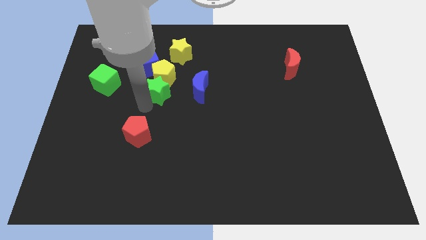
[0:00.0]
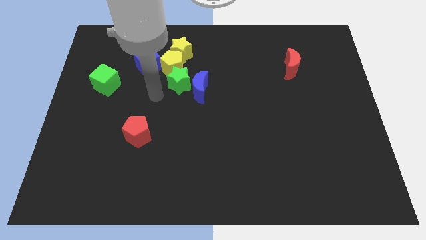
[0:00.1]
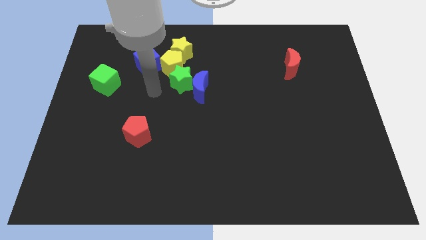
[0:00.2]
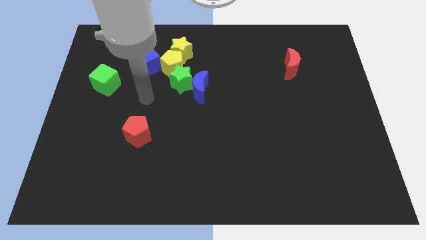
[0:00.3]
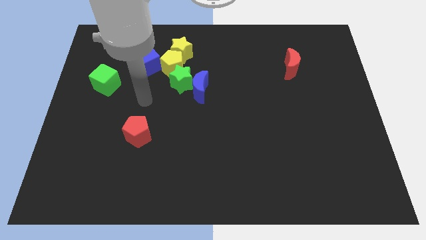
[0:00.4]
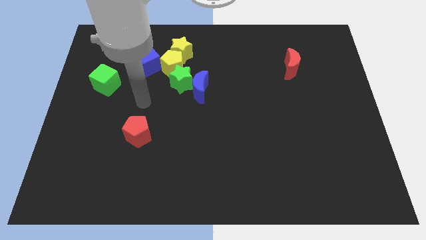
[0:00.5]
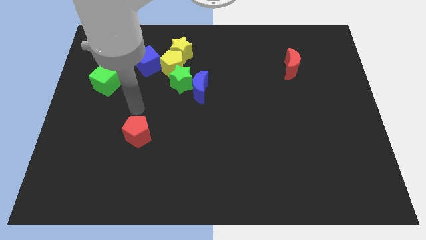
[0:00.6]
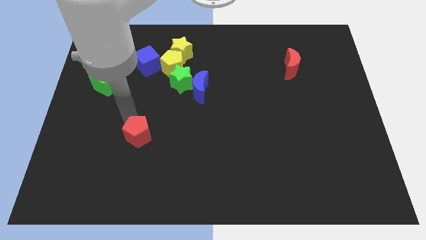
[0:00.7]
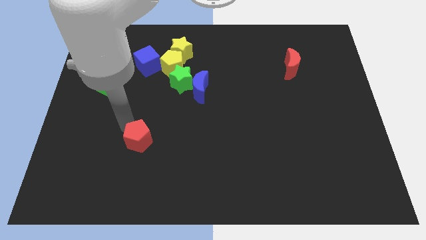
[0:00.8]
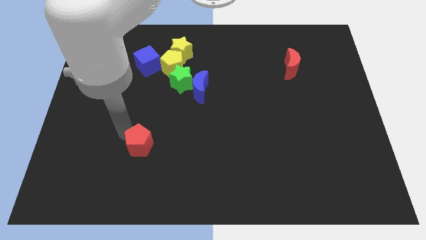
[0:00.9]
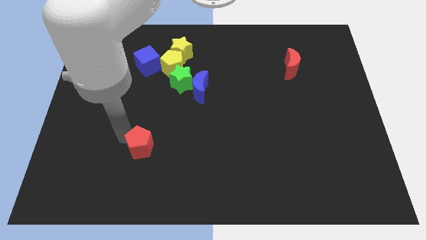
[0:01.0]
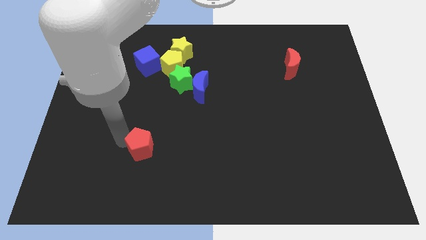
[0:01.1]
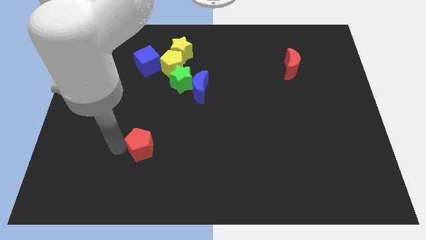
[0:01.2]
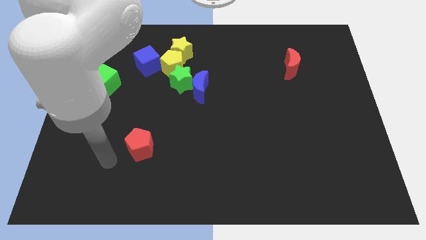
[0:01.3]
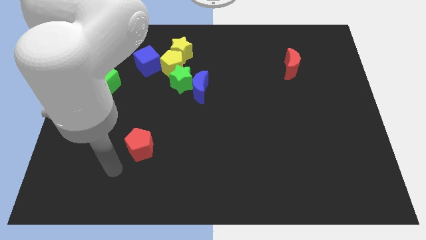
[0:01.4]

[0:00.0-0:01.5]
slightly push the red pentagon downwards

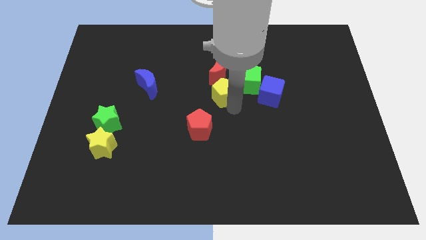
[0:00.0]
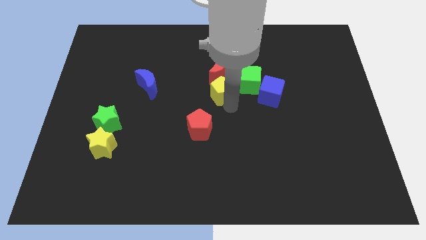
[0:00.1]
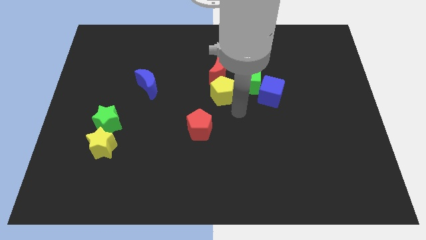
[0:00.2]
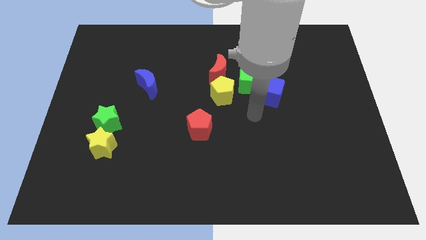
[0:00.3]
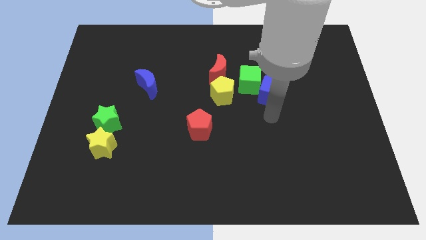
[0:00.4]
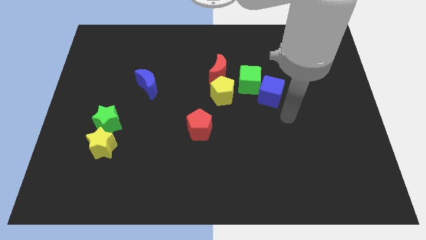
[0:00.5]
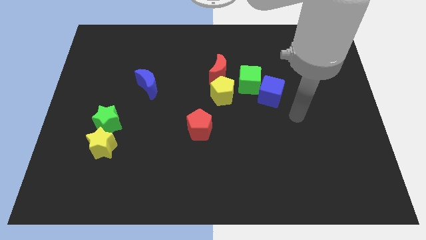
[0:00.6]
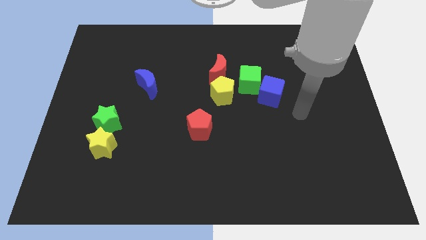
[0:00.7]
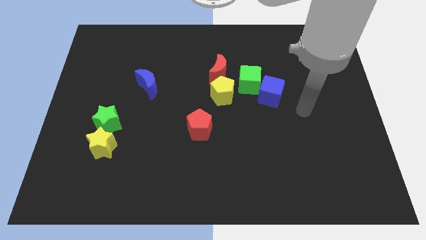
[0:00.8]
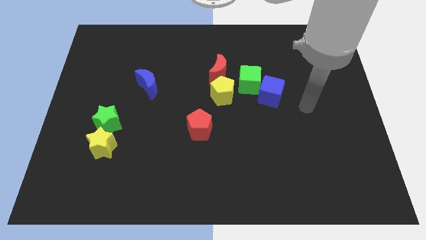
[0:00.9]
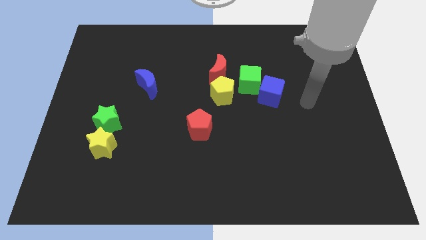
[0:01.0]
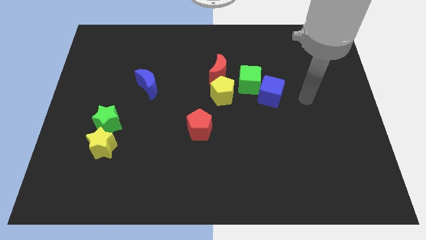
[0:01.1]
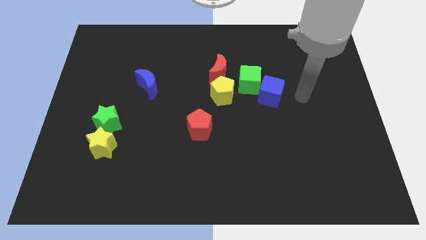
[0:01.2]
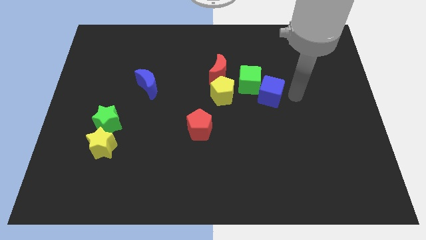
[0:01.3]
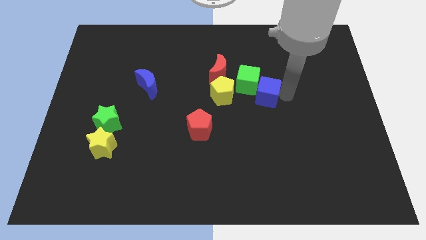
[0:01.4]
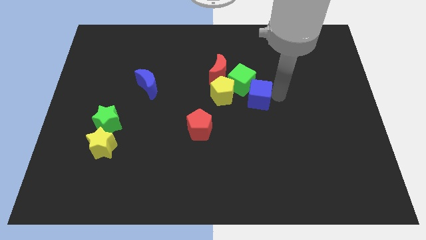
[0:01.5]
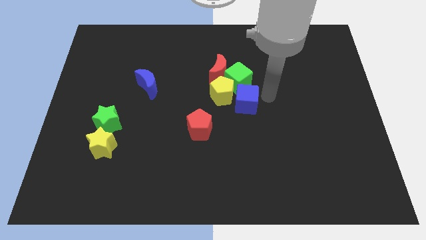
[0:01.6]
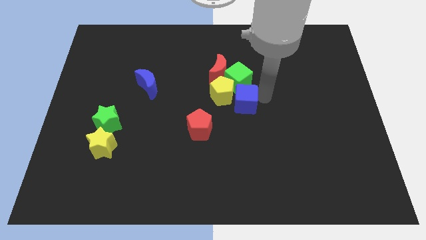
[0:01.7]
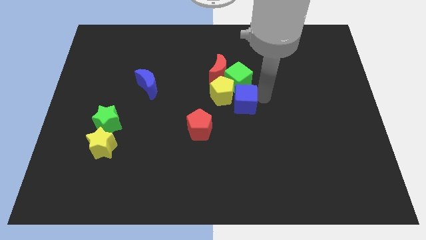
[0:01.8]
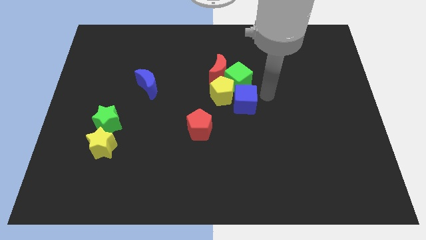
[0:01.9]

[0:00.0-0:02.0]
place the blue cube at the right side of the yellow pentagon

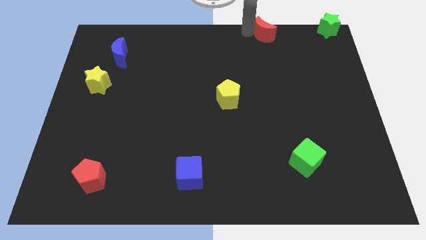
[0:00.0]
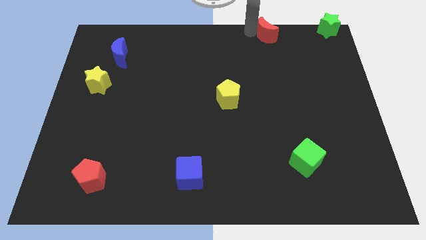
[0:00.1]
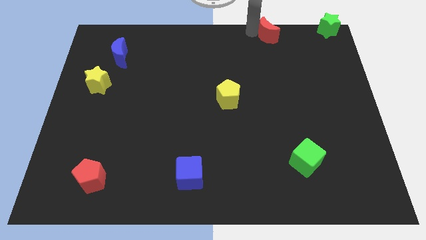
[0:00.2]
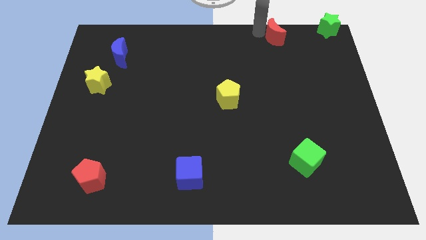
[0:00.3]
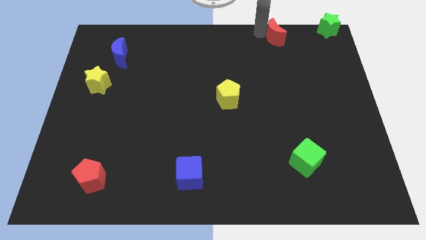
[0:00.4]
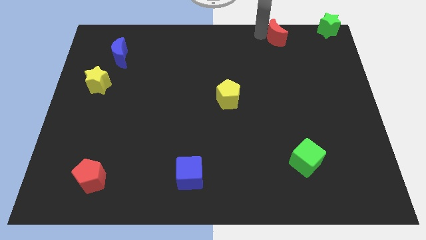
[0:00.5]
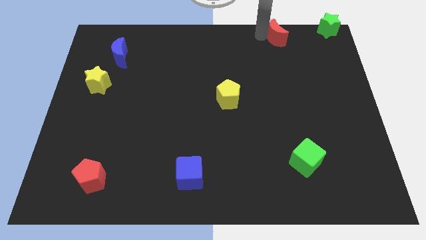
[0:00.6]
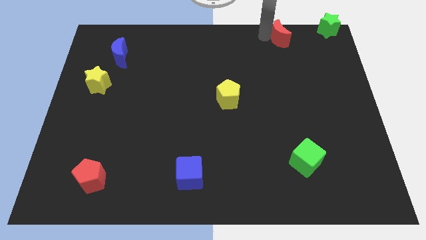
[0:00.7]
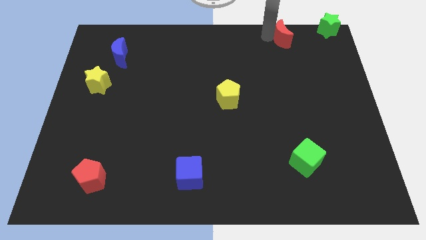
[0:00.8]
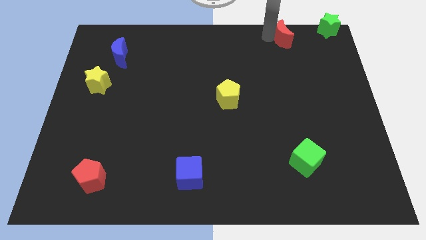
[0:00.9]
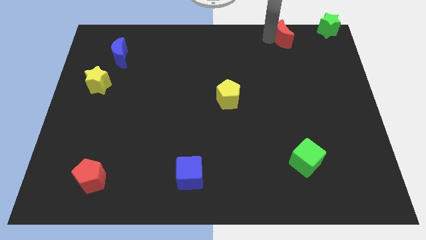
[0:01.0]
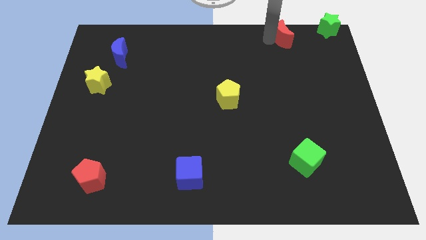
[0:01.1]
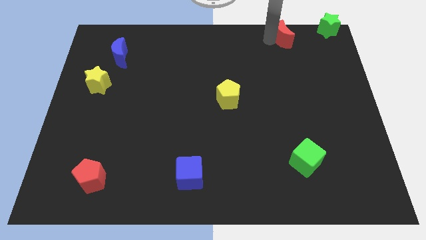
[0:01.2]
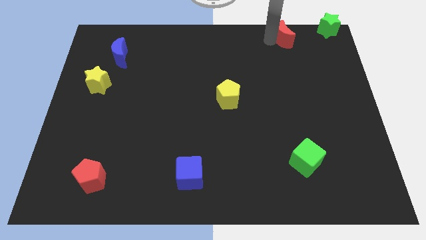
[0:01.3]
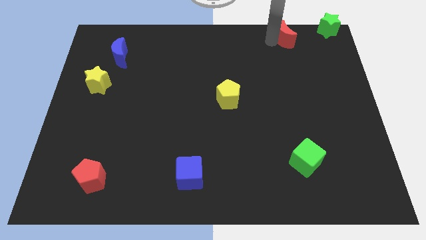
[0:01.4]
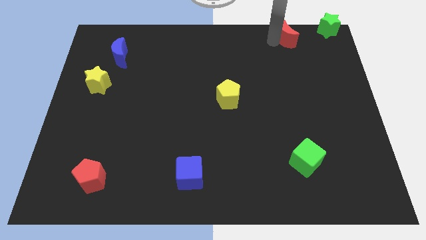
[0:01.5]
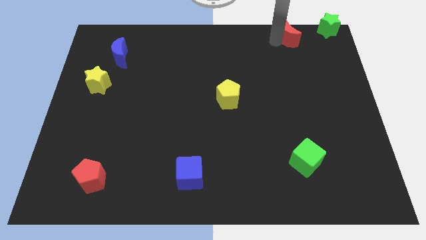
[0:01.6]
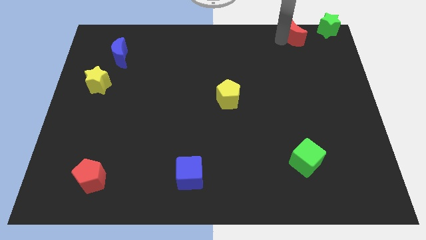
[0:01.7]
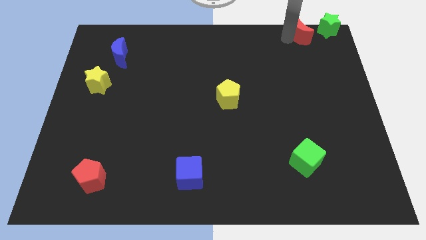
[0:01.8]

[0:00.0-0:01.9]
push the red crescent near the green star

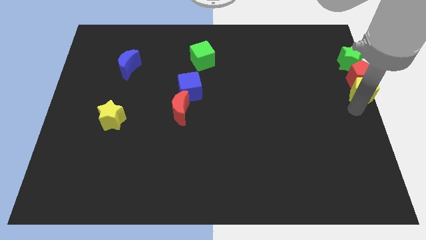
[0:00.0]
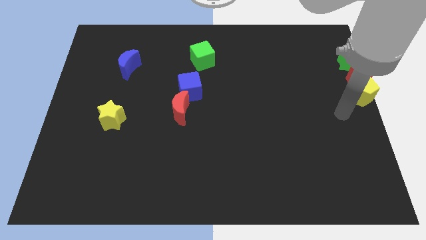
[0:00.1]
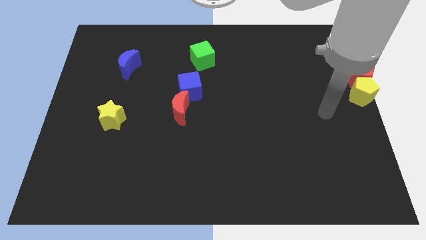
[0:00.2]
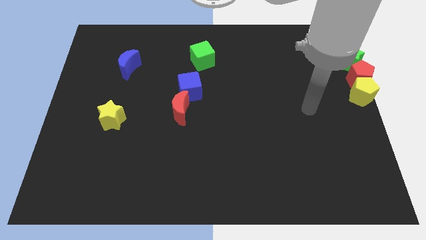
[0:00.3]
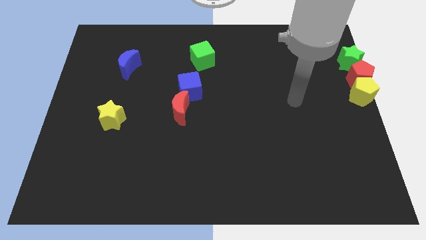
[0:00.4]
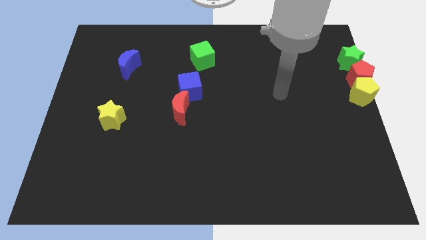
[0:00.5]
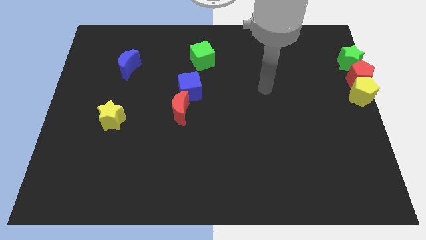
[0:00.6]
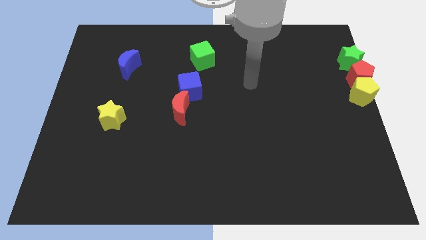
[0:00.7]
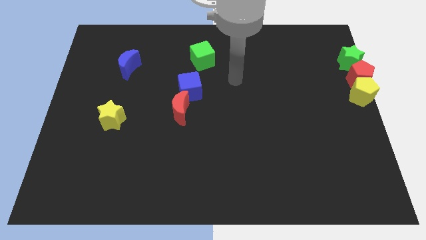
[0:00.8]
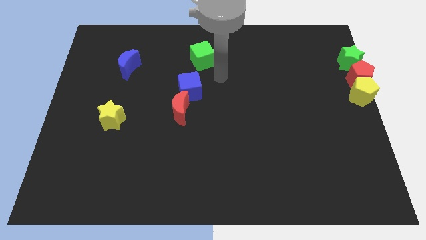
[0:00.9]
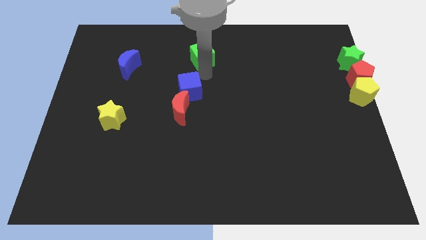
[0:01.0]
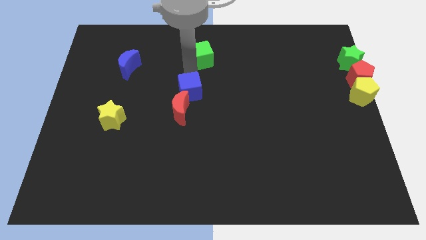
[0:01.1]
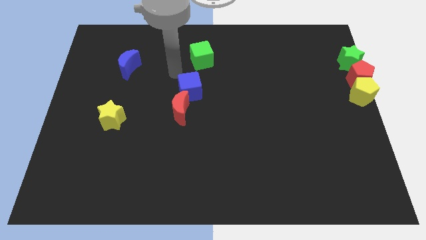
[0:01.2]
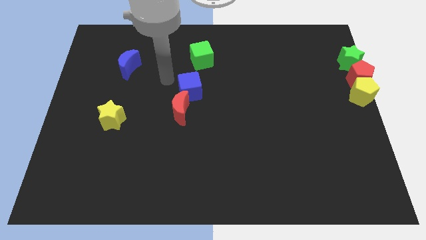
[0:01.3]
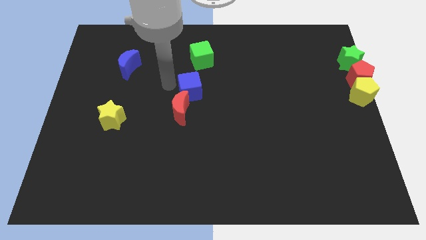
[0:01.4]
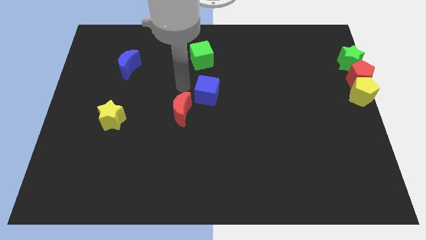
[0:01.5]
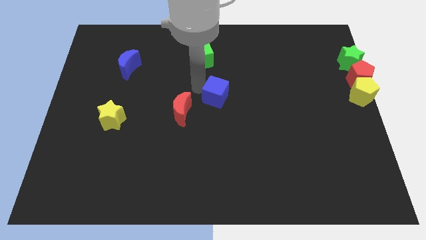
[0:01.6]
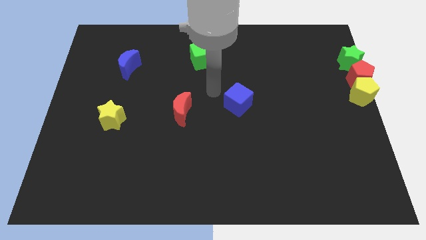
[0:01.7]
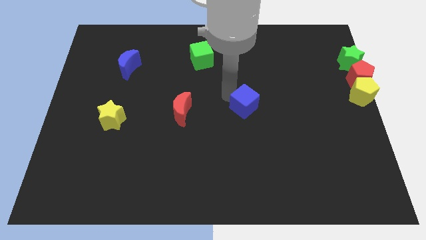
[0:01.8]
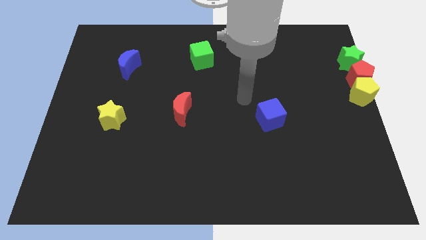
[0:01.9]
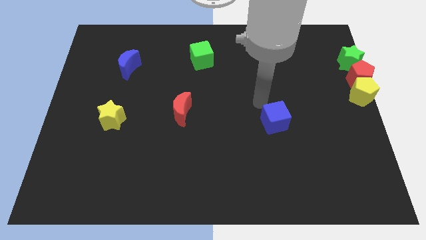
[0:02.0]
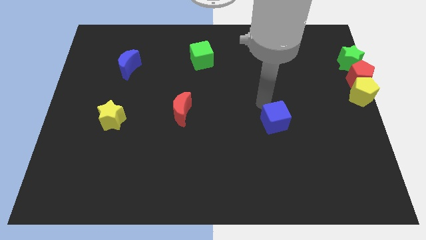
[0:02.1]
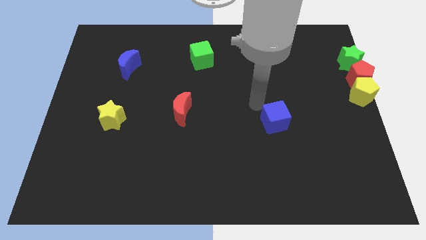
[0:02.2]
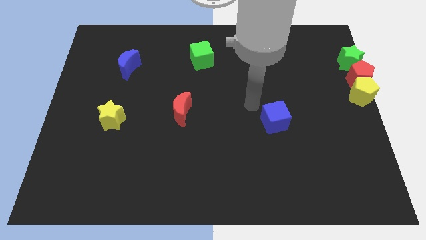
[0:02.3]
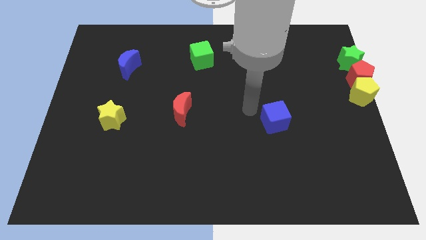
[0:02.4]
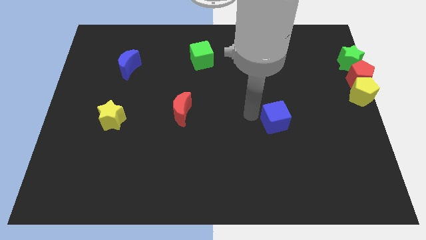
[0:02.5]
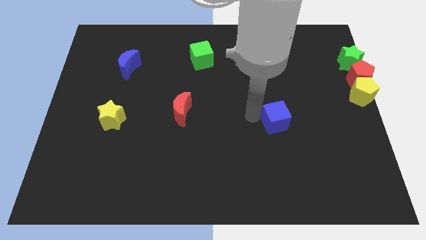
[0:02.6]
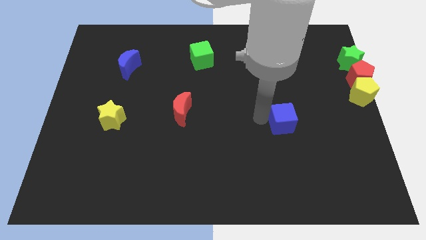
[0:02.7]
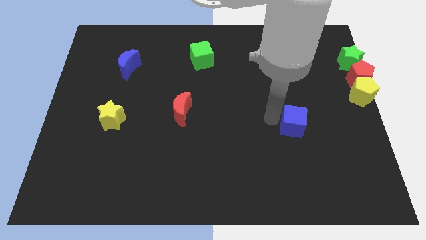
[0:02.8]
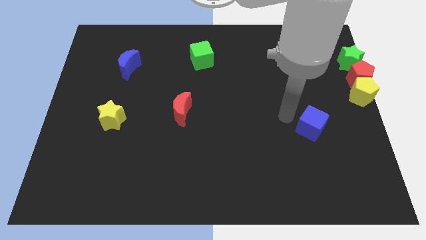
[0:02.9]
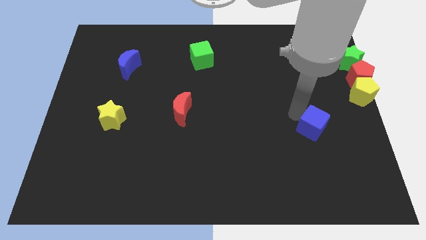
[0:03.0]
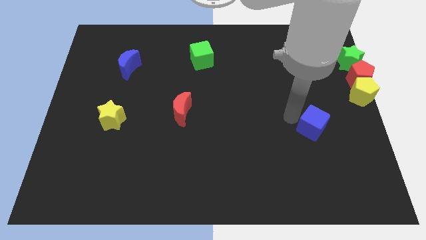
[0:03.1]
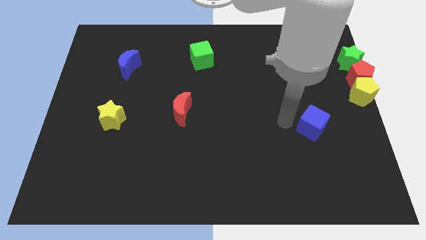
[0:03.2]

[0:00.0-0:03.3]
take the blue cube away from the red crescent
